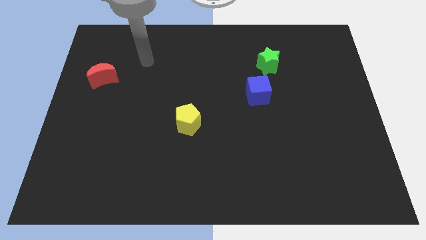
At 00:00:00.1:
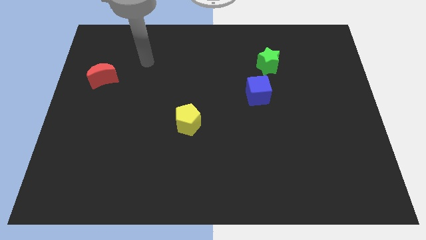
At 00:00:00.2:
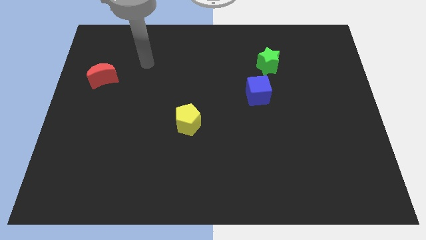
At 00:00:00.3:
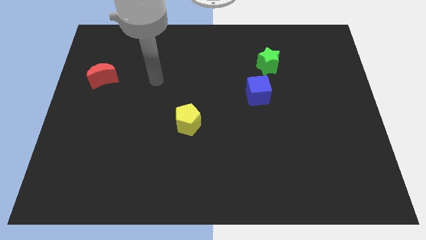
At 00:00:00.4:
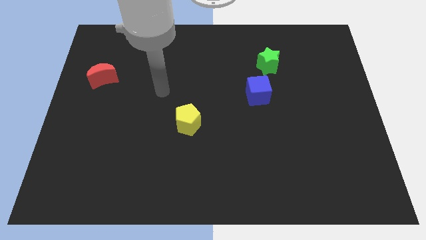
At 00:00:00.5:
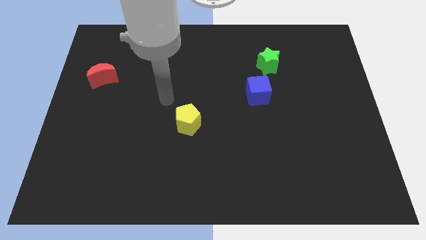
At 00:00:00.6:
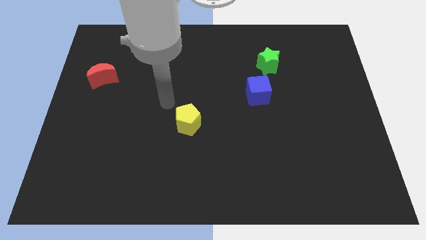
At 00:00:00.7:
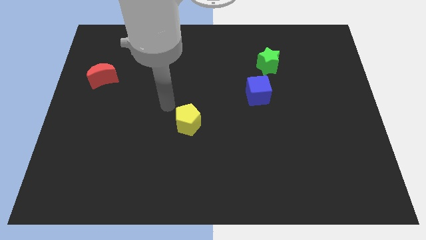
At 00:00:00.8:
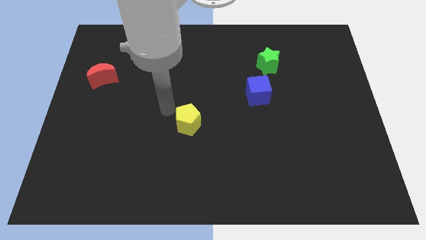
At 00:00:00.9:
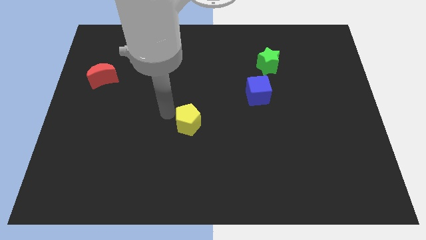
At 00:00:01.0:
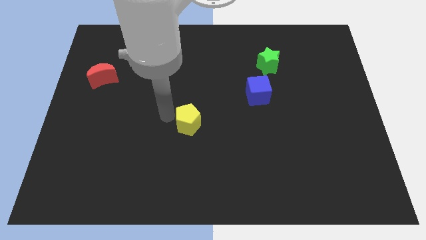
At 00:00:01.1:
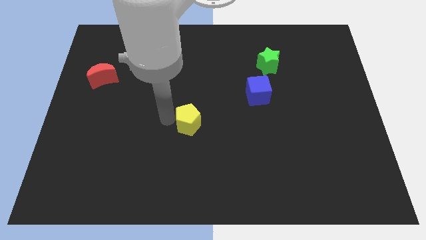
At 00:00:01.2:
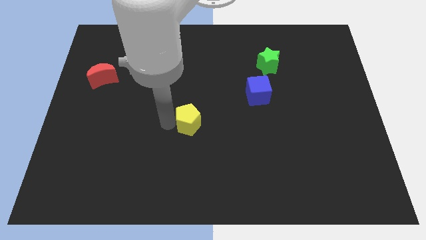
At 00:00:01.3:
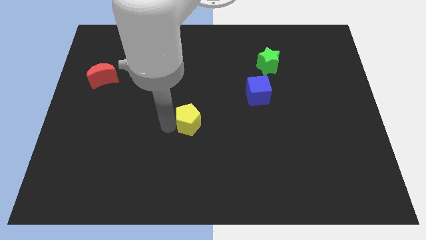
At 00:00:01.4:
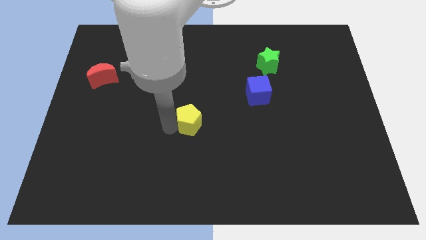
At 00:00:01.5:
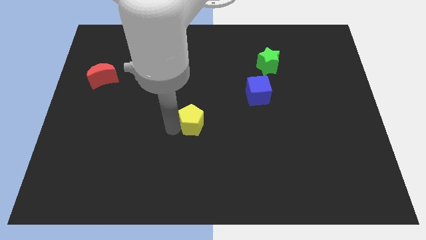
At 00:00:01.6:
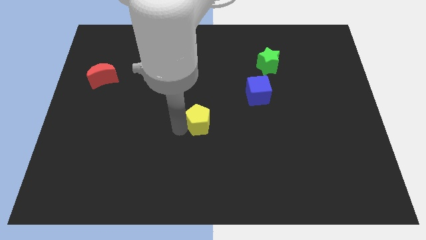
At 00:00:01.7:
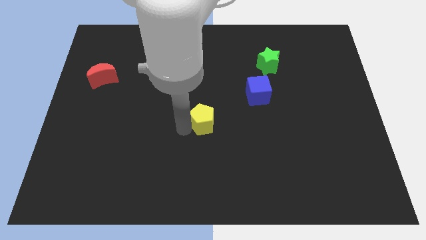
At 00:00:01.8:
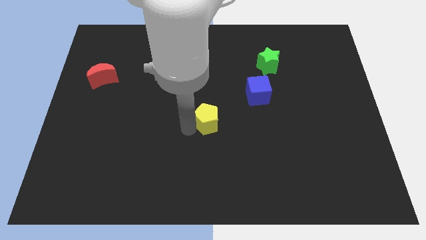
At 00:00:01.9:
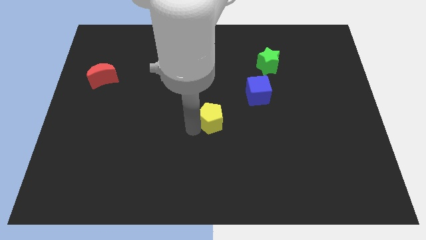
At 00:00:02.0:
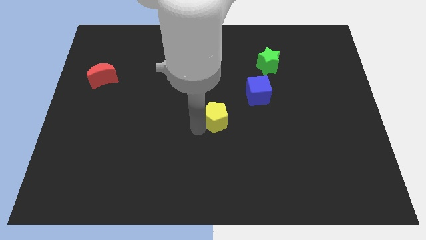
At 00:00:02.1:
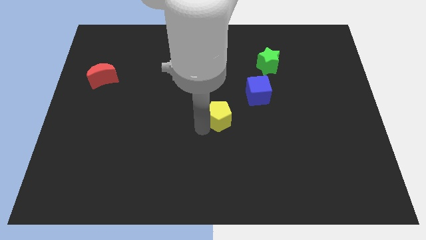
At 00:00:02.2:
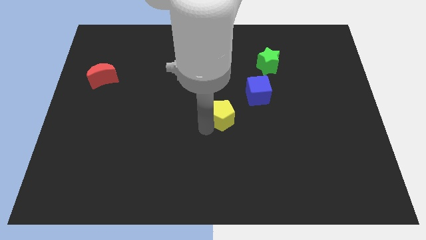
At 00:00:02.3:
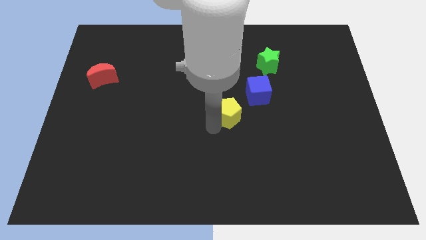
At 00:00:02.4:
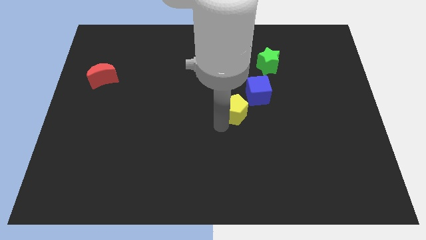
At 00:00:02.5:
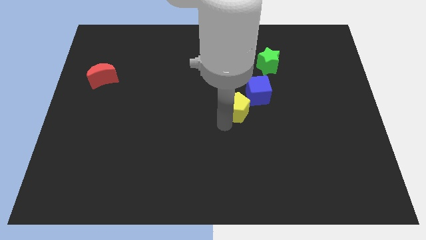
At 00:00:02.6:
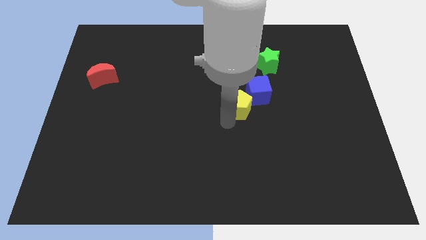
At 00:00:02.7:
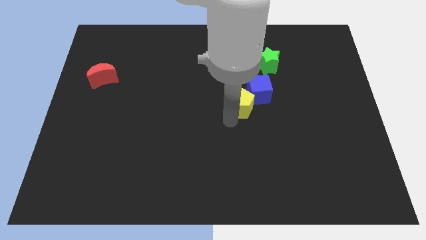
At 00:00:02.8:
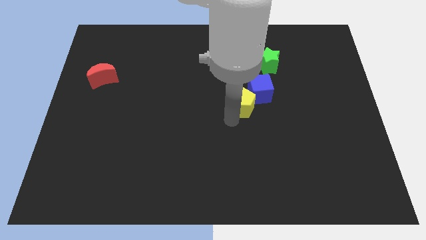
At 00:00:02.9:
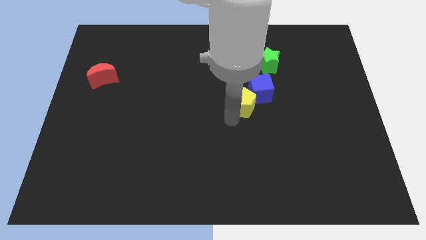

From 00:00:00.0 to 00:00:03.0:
put the yellow pentagon close to the blue block

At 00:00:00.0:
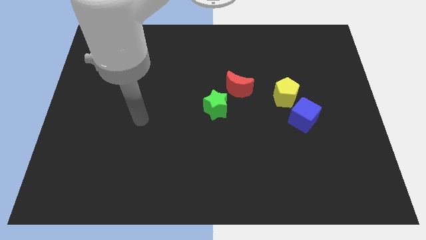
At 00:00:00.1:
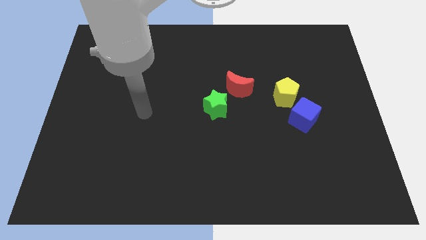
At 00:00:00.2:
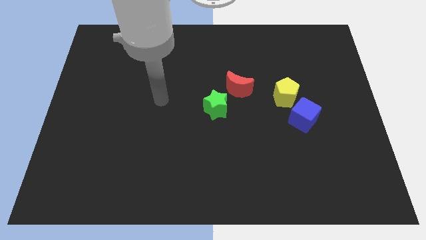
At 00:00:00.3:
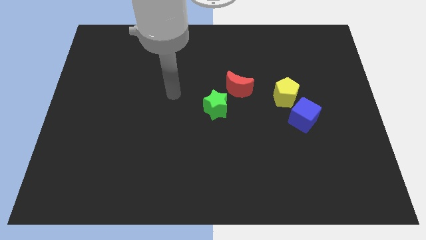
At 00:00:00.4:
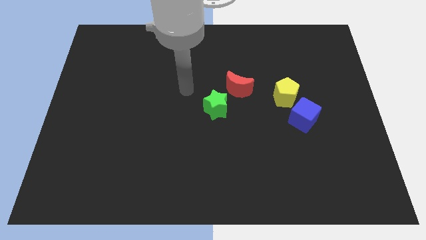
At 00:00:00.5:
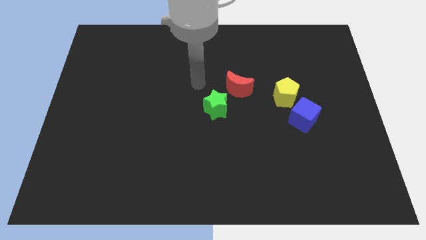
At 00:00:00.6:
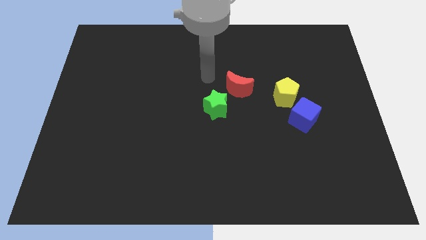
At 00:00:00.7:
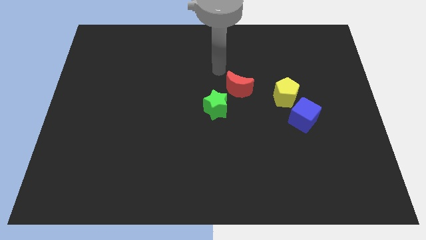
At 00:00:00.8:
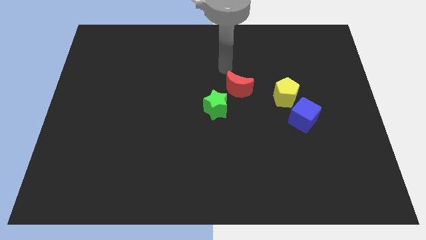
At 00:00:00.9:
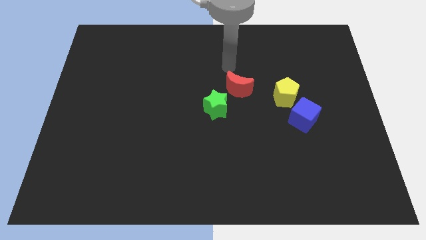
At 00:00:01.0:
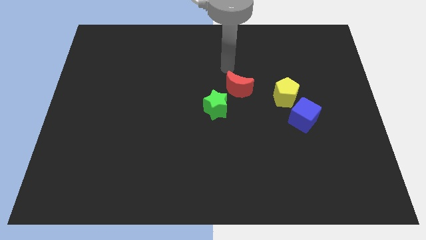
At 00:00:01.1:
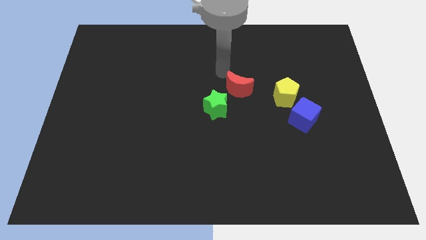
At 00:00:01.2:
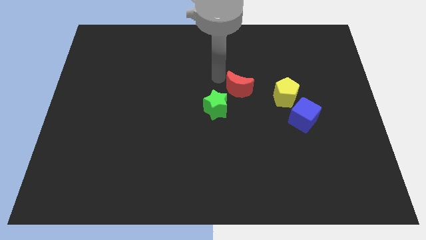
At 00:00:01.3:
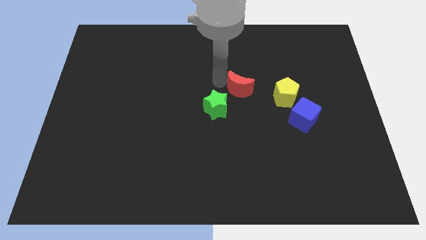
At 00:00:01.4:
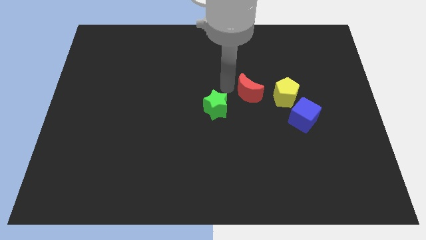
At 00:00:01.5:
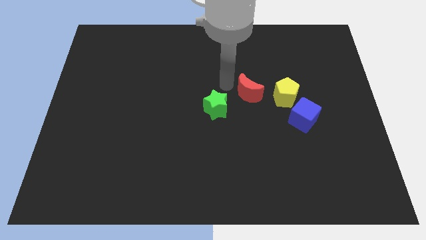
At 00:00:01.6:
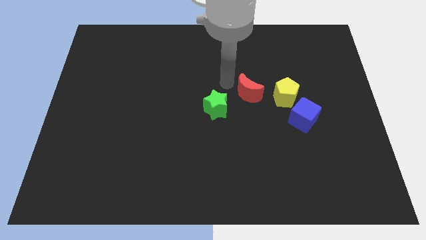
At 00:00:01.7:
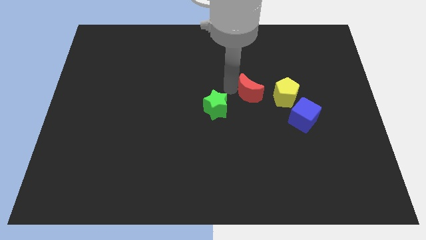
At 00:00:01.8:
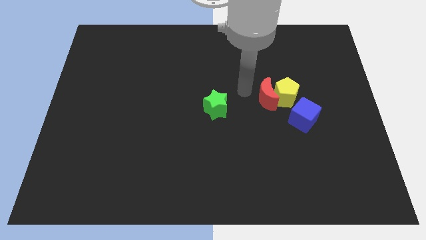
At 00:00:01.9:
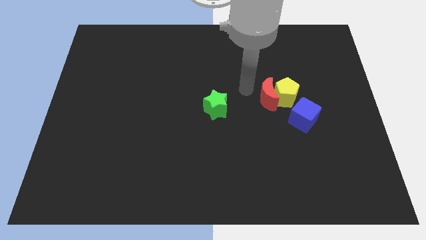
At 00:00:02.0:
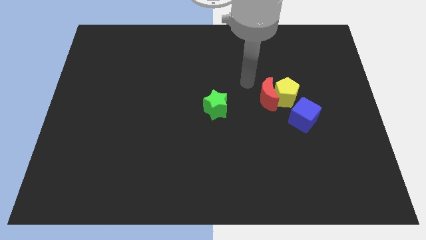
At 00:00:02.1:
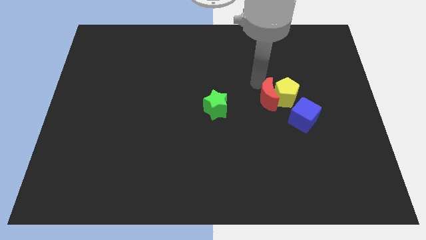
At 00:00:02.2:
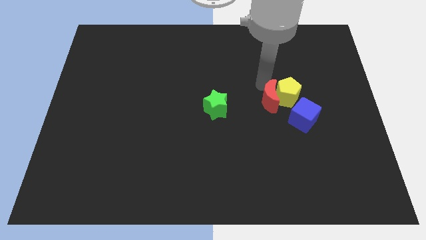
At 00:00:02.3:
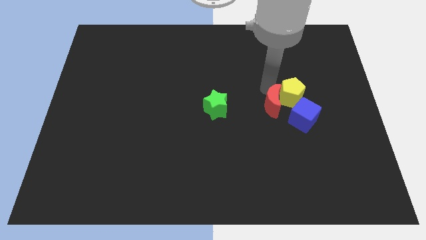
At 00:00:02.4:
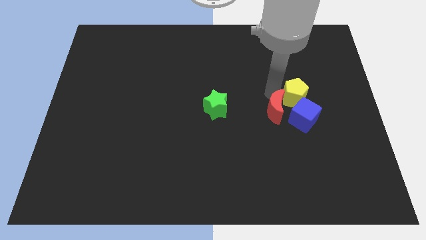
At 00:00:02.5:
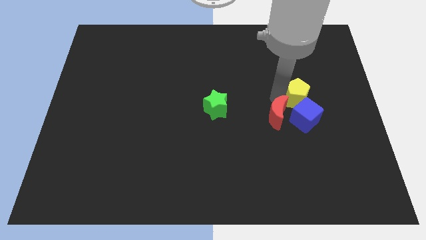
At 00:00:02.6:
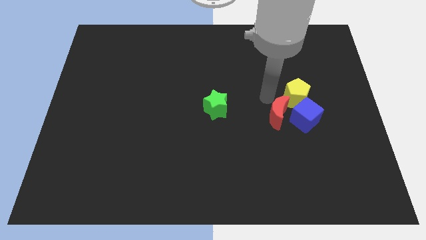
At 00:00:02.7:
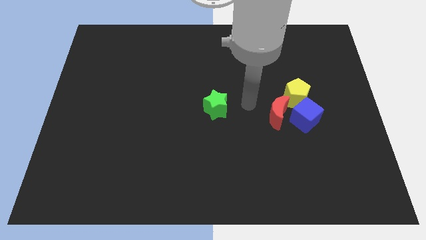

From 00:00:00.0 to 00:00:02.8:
move the red block close to the blue block

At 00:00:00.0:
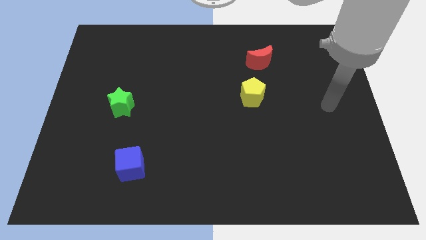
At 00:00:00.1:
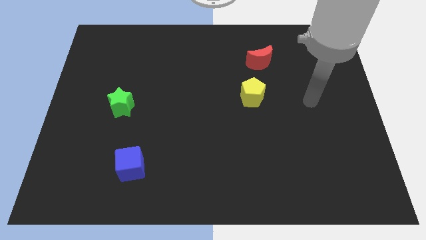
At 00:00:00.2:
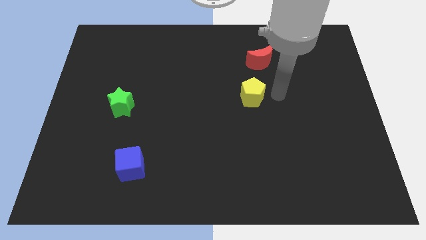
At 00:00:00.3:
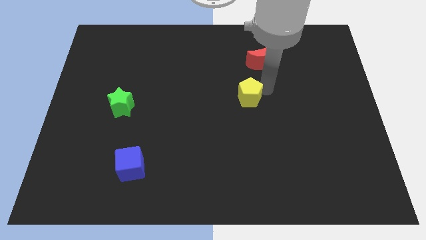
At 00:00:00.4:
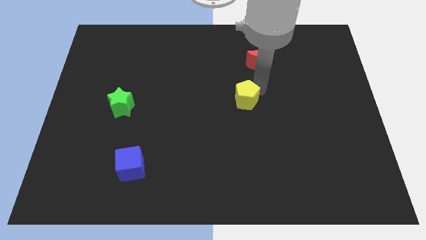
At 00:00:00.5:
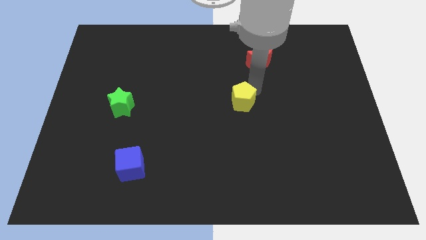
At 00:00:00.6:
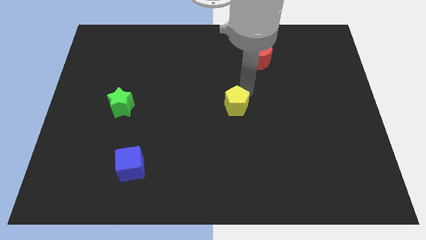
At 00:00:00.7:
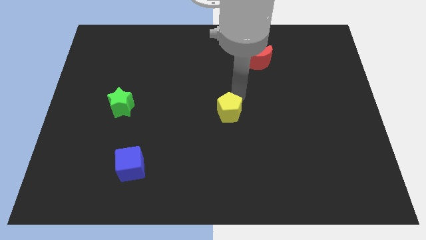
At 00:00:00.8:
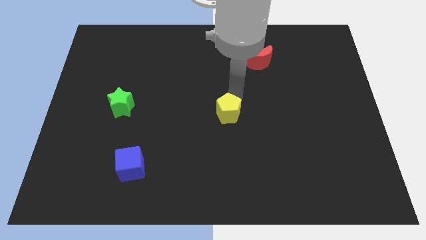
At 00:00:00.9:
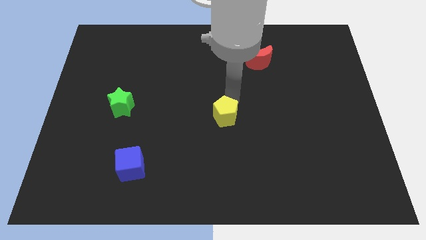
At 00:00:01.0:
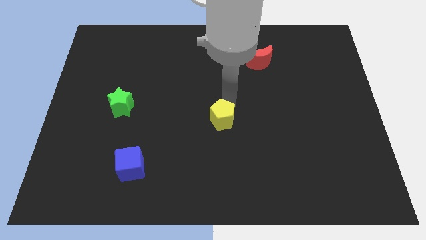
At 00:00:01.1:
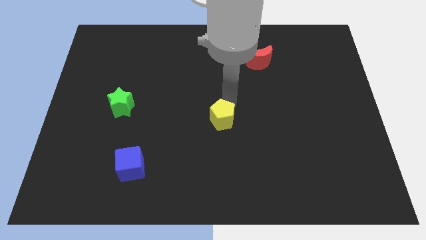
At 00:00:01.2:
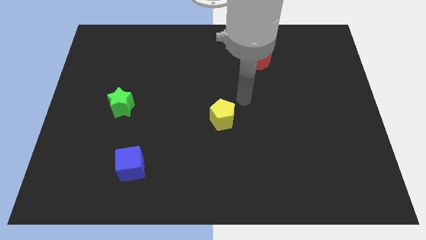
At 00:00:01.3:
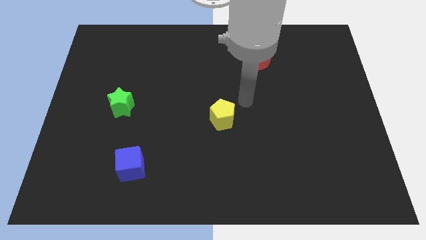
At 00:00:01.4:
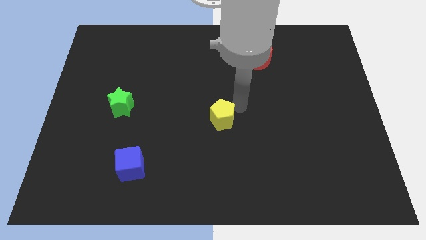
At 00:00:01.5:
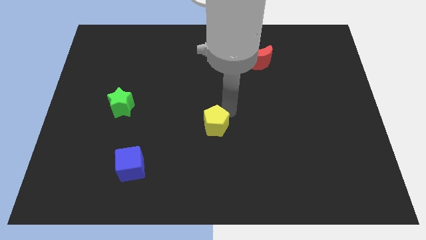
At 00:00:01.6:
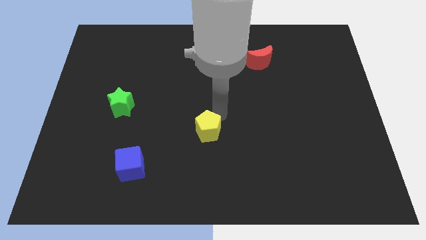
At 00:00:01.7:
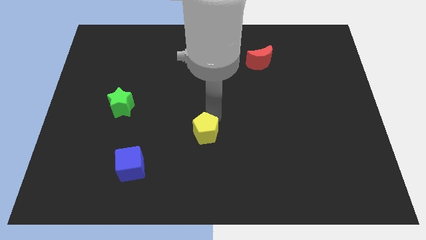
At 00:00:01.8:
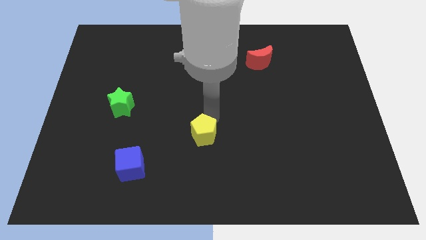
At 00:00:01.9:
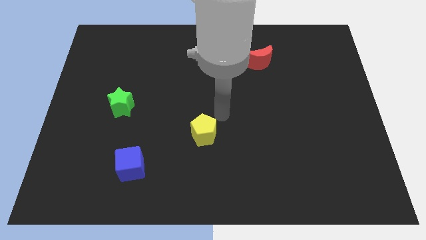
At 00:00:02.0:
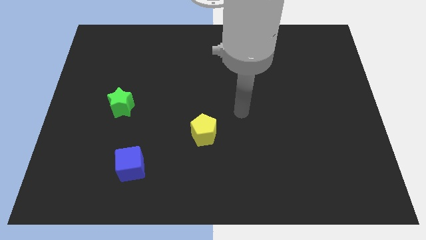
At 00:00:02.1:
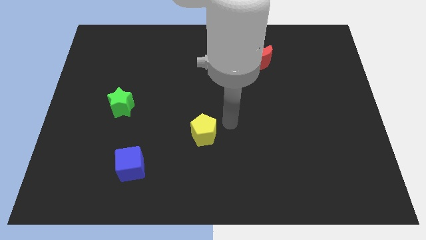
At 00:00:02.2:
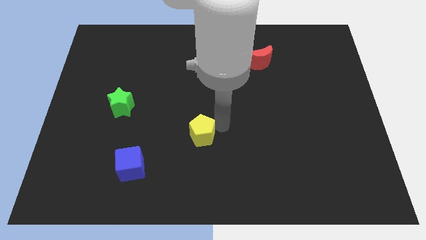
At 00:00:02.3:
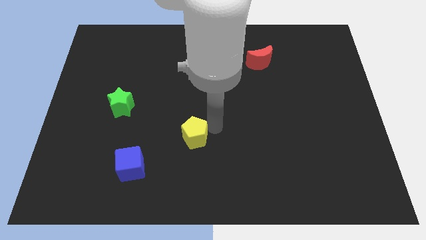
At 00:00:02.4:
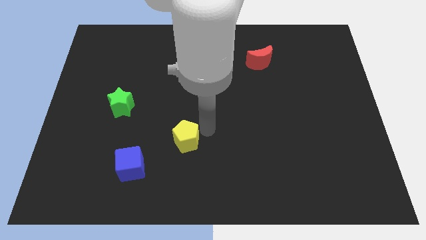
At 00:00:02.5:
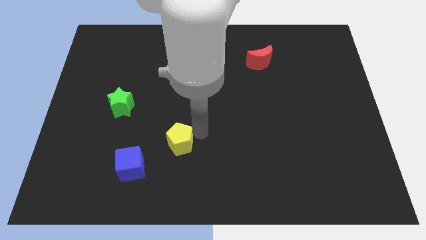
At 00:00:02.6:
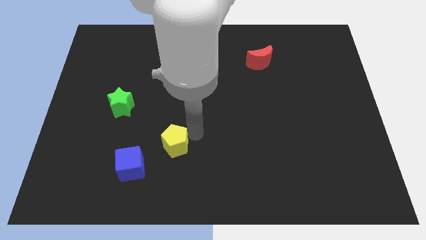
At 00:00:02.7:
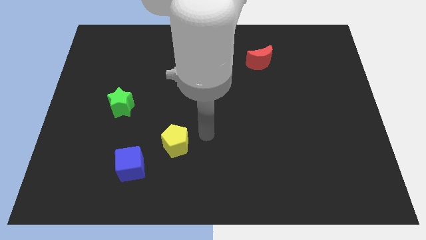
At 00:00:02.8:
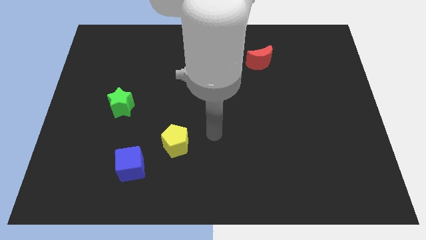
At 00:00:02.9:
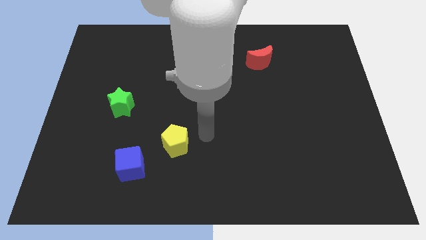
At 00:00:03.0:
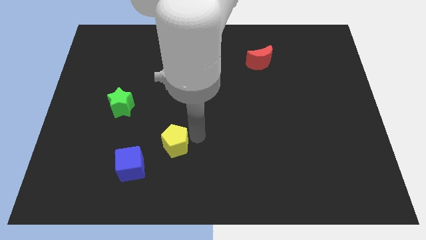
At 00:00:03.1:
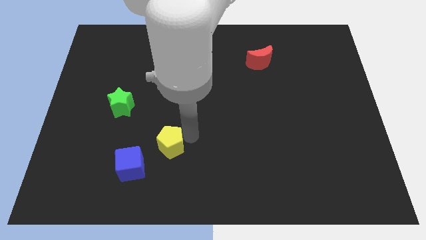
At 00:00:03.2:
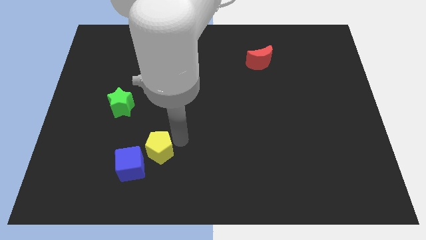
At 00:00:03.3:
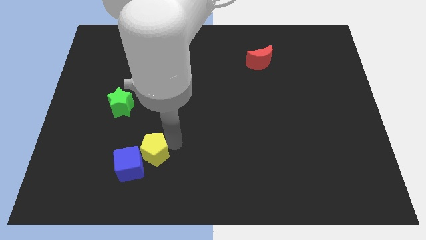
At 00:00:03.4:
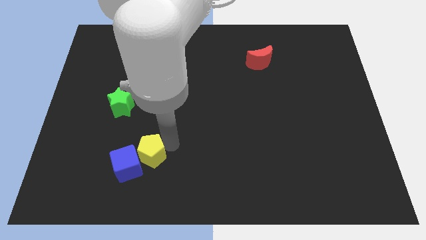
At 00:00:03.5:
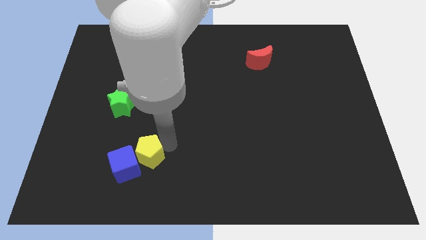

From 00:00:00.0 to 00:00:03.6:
move the pentagon to the cube
